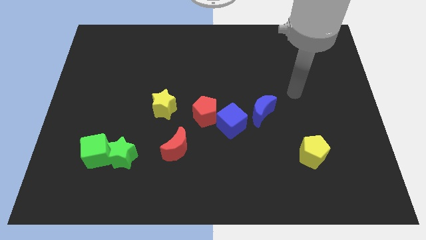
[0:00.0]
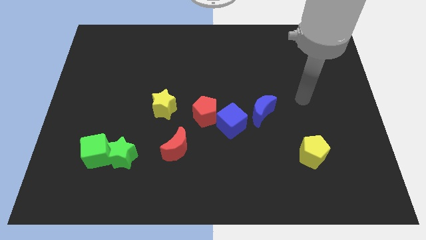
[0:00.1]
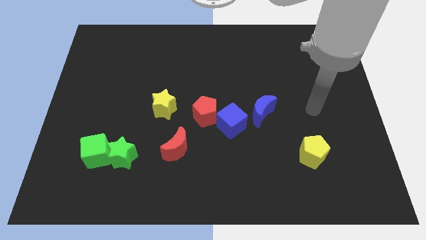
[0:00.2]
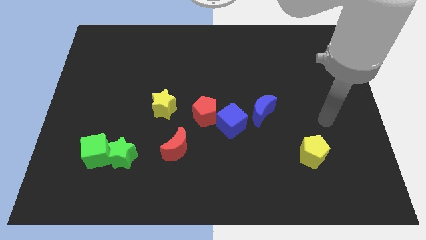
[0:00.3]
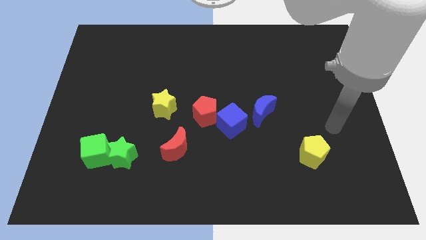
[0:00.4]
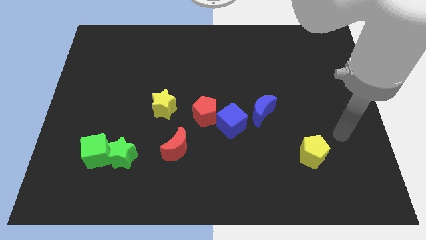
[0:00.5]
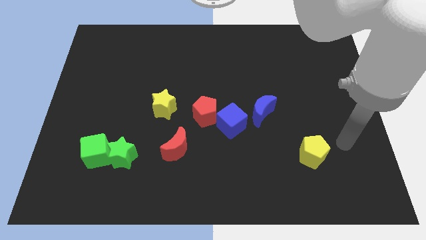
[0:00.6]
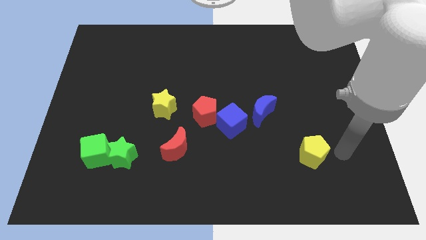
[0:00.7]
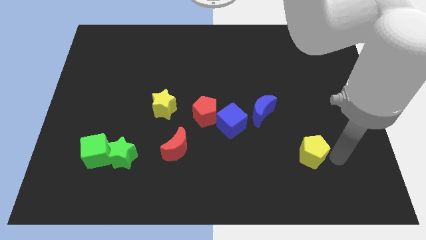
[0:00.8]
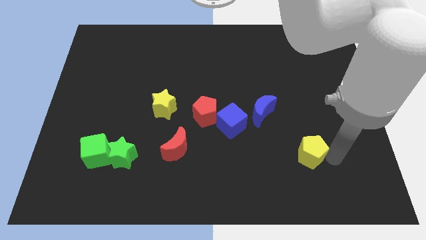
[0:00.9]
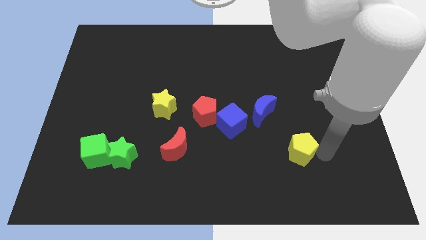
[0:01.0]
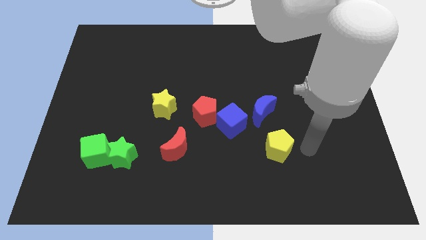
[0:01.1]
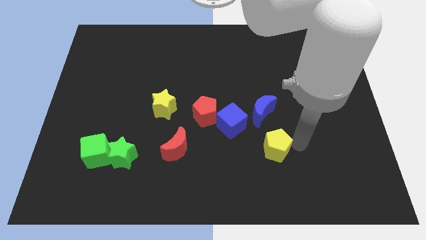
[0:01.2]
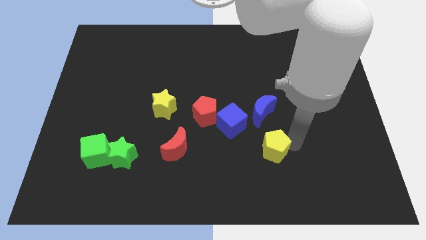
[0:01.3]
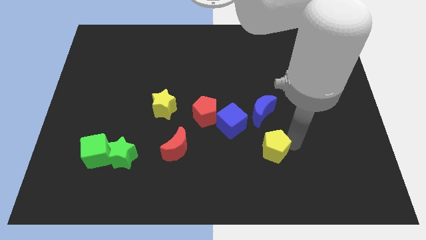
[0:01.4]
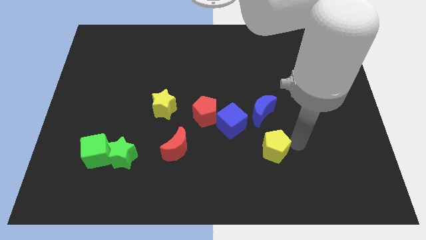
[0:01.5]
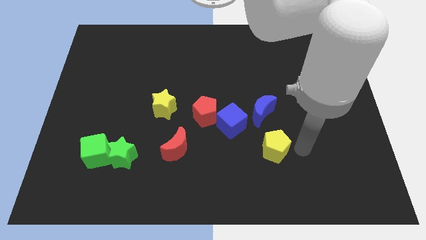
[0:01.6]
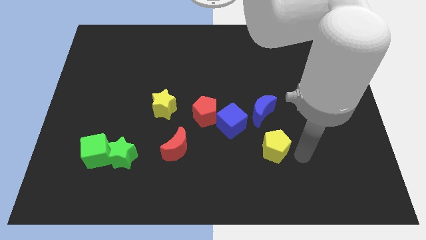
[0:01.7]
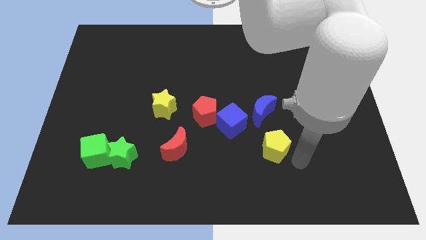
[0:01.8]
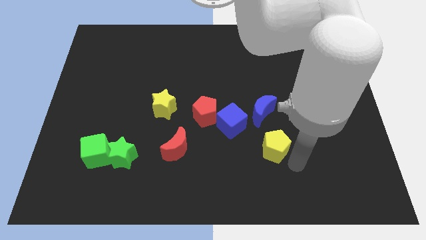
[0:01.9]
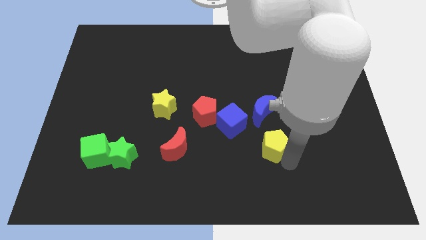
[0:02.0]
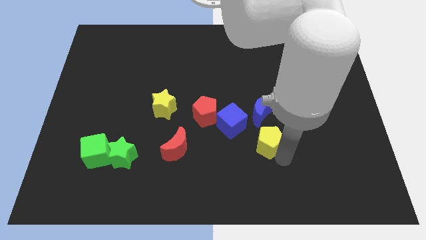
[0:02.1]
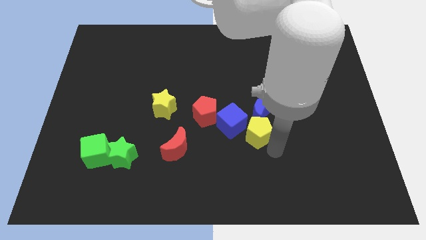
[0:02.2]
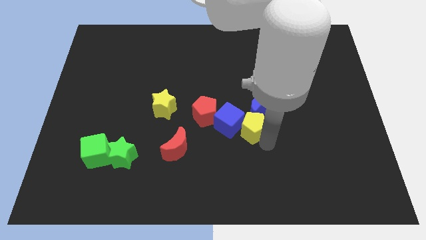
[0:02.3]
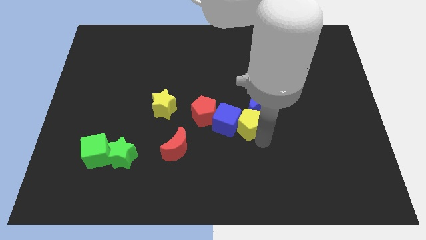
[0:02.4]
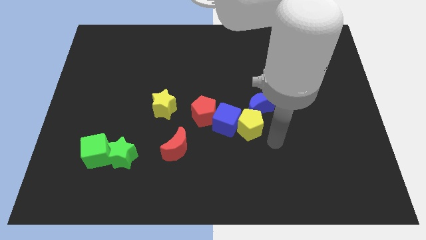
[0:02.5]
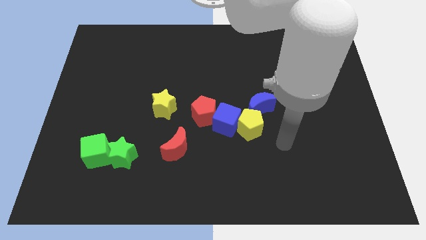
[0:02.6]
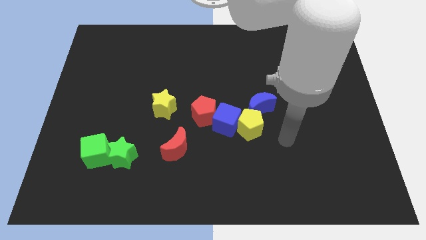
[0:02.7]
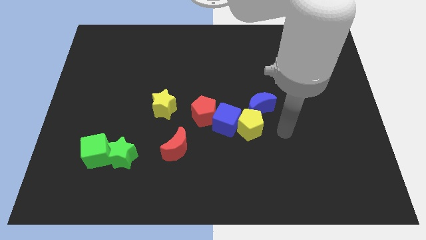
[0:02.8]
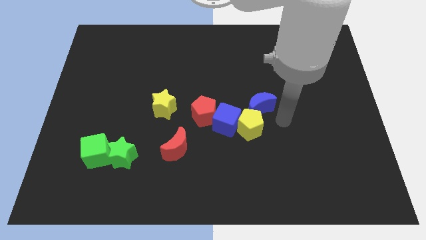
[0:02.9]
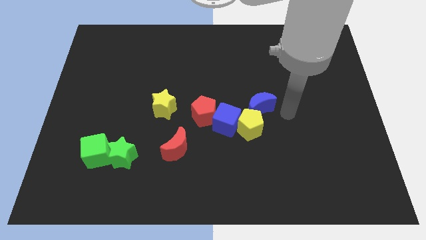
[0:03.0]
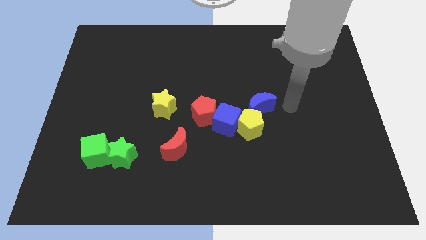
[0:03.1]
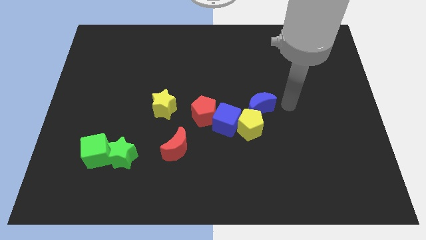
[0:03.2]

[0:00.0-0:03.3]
move the yellow pentagon into the right side of the blue cube

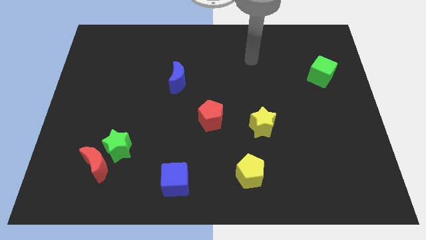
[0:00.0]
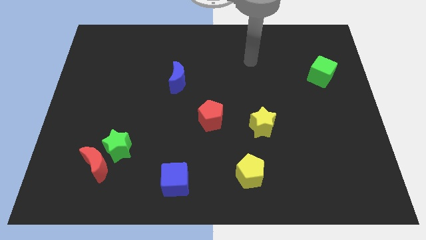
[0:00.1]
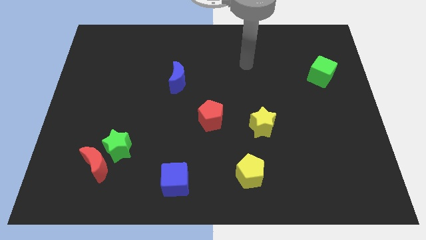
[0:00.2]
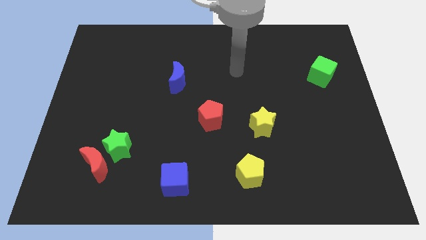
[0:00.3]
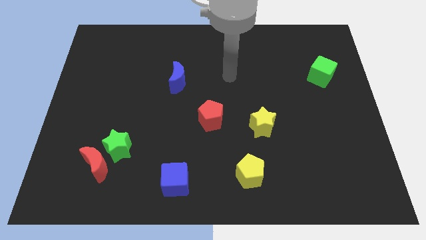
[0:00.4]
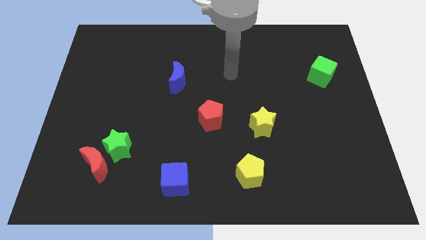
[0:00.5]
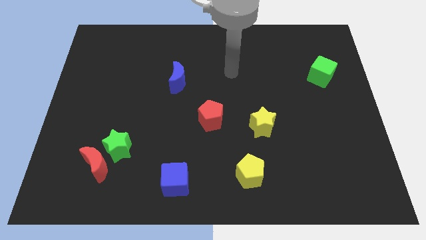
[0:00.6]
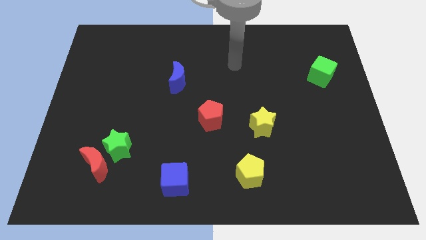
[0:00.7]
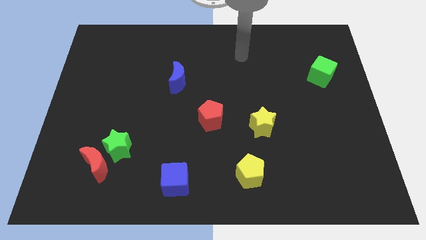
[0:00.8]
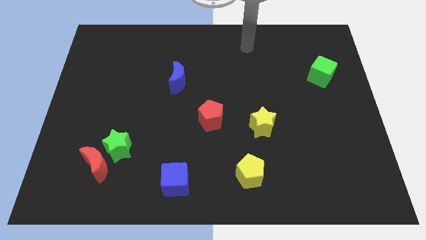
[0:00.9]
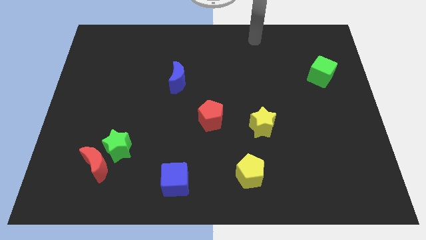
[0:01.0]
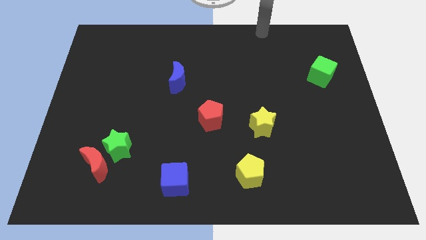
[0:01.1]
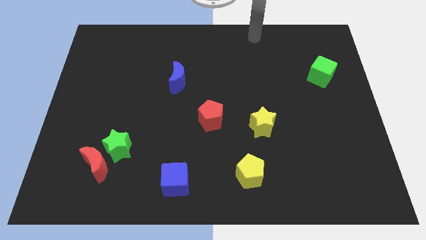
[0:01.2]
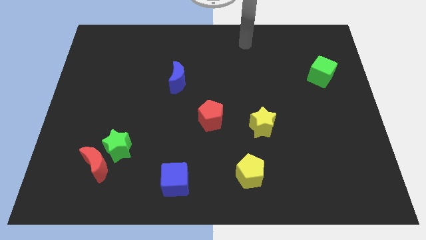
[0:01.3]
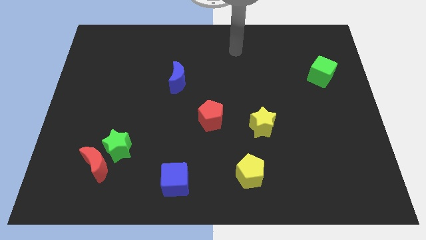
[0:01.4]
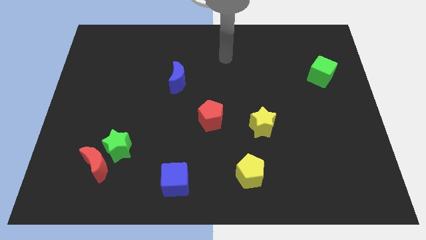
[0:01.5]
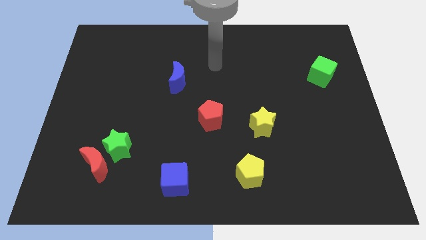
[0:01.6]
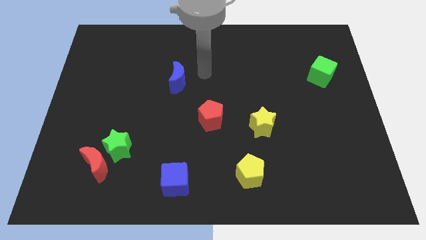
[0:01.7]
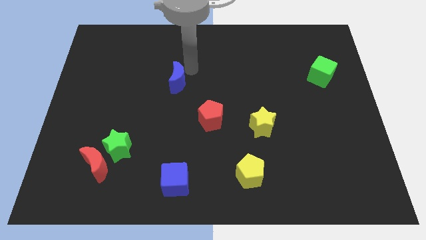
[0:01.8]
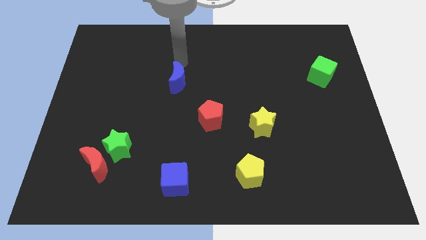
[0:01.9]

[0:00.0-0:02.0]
move the arm to the top of the blue crescent

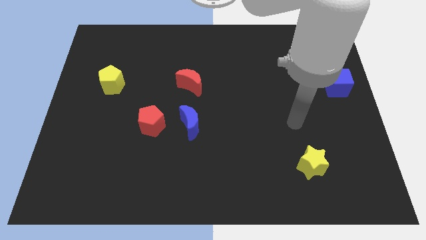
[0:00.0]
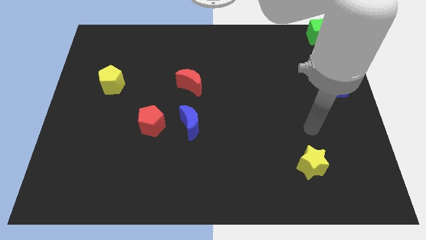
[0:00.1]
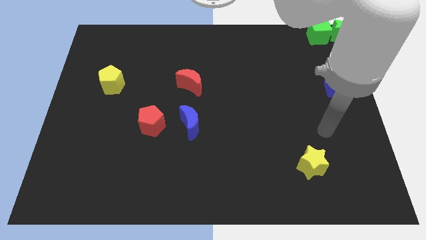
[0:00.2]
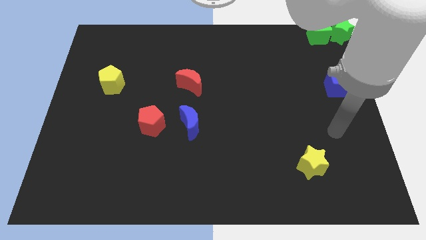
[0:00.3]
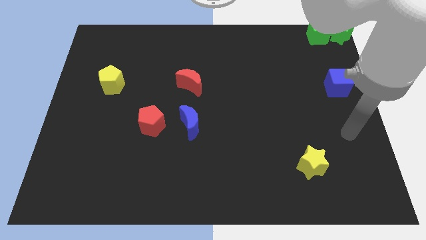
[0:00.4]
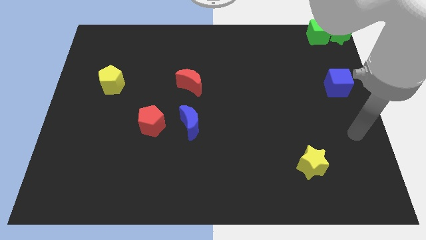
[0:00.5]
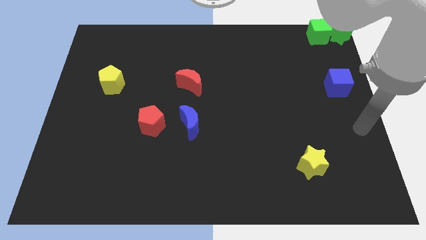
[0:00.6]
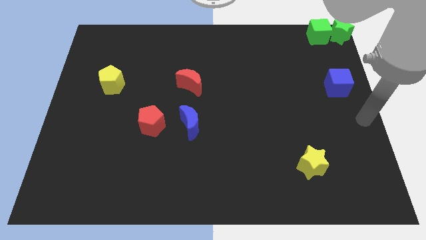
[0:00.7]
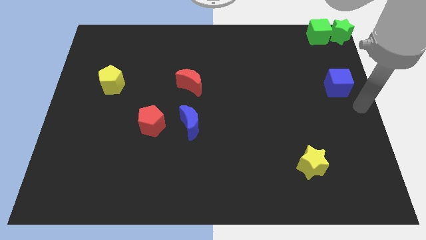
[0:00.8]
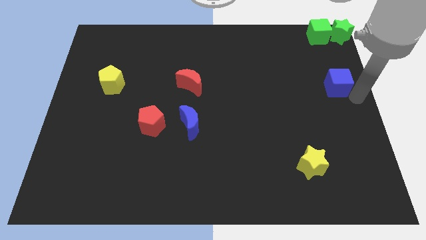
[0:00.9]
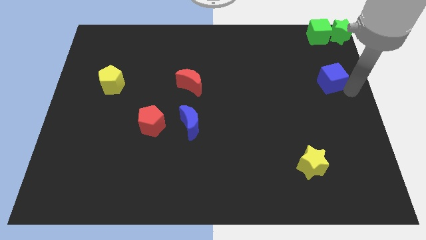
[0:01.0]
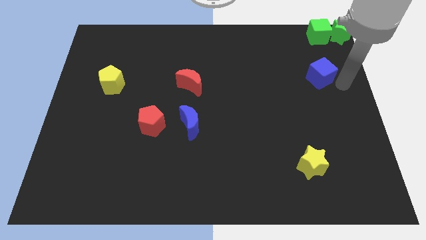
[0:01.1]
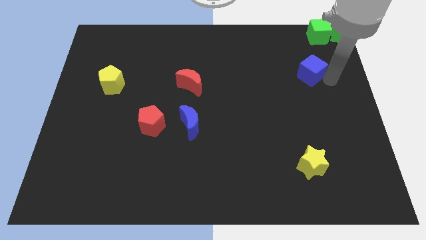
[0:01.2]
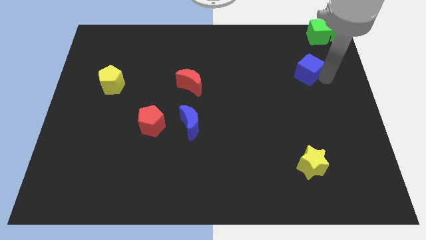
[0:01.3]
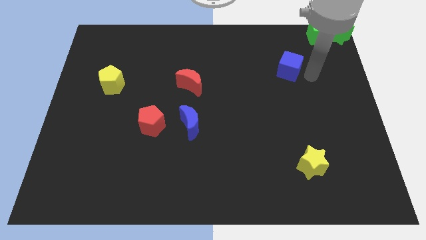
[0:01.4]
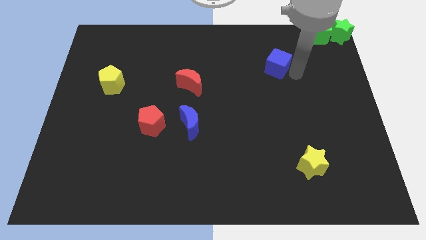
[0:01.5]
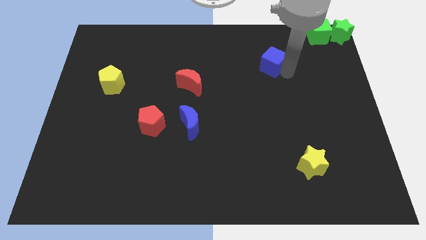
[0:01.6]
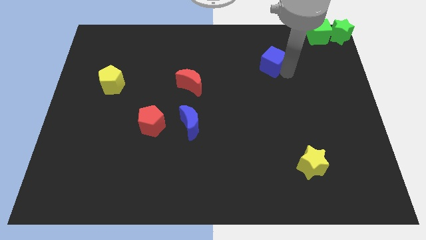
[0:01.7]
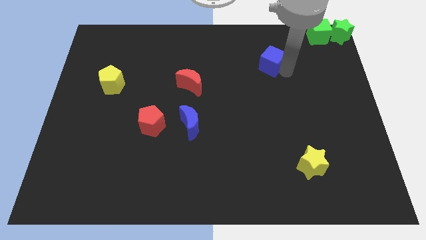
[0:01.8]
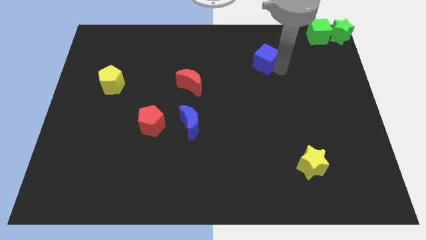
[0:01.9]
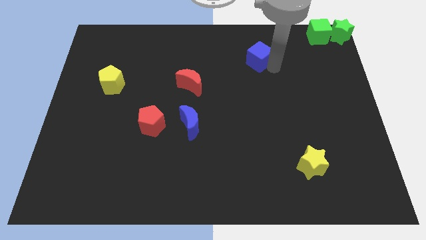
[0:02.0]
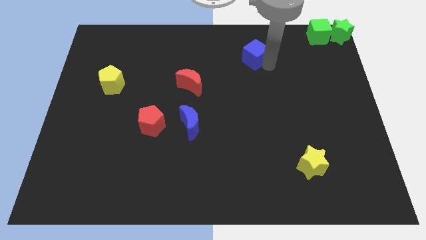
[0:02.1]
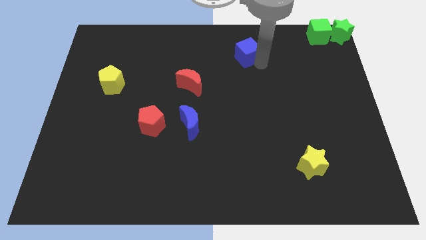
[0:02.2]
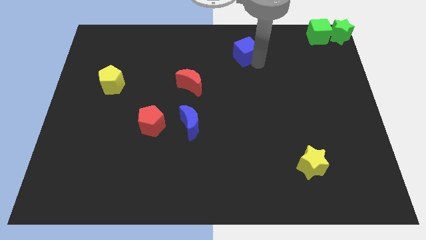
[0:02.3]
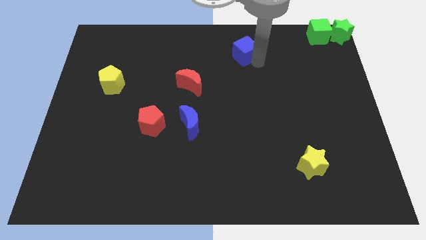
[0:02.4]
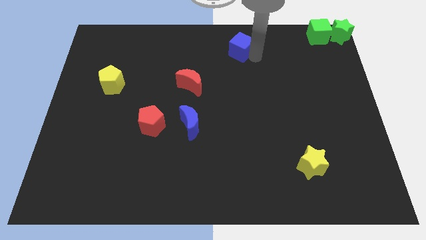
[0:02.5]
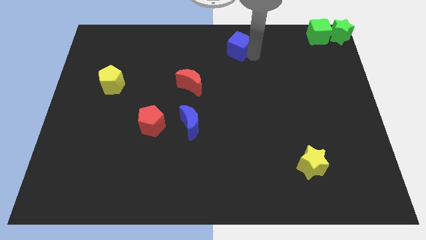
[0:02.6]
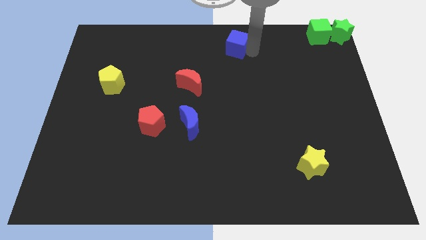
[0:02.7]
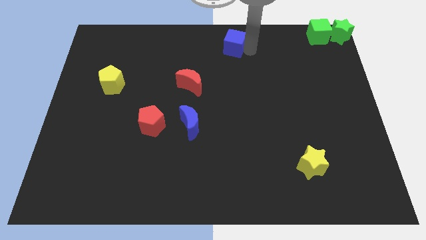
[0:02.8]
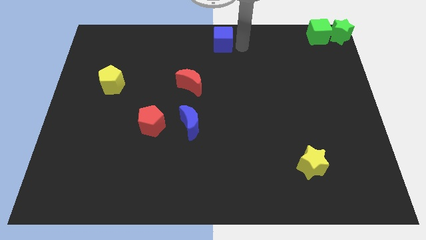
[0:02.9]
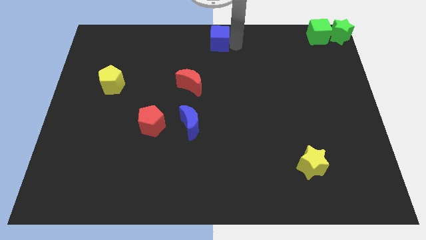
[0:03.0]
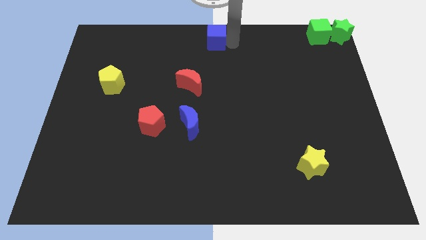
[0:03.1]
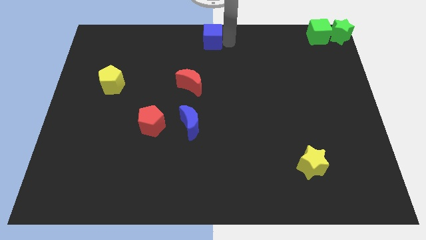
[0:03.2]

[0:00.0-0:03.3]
place the blue cube at the top center

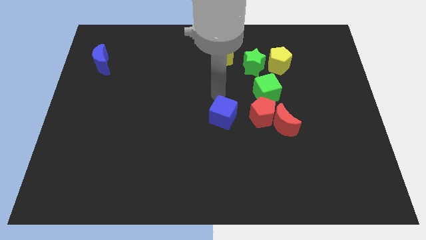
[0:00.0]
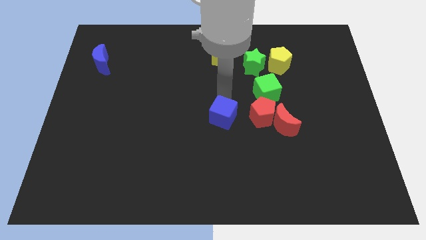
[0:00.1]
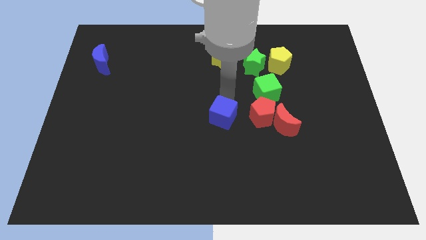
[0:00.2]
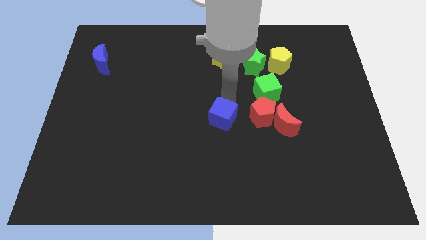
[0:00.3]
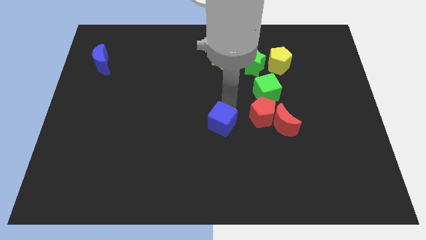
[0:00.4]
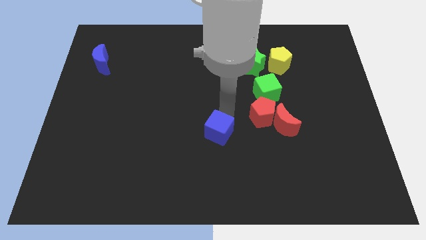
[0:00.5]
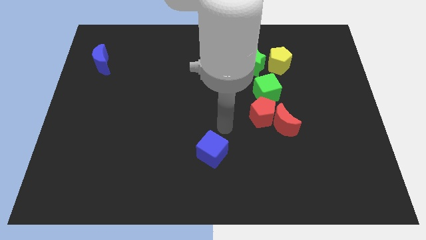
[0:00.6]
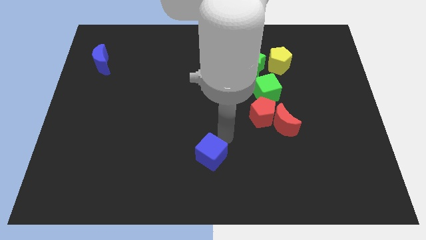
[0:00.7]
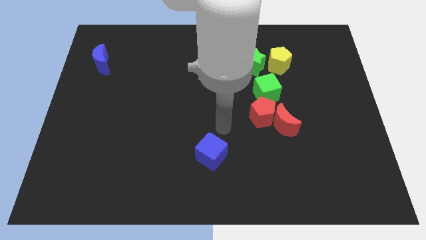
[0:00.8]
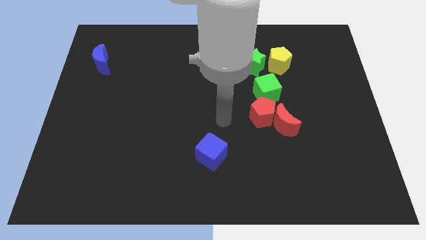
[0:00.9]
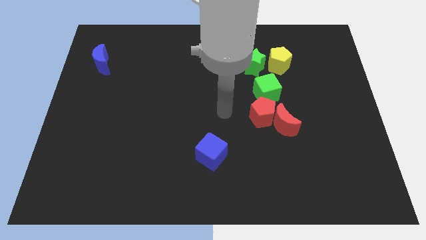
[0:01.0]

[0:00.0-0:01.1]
slightly move the blue cube towards the bottom center of the board
